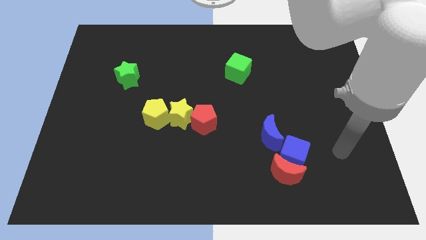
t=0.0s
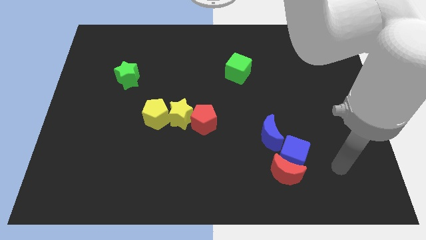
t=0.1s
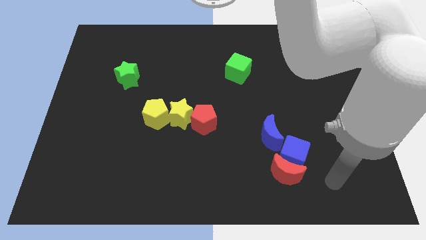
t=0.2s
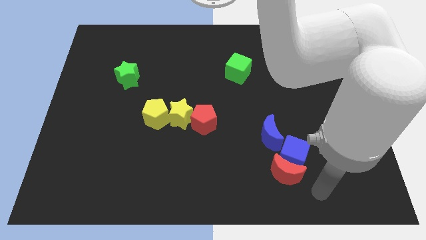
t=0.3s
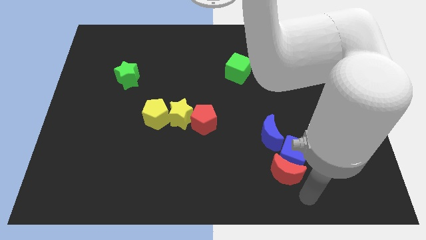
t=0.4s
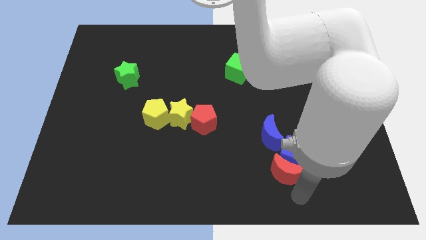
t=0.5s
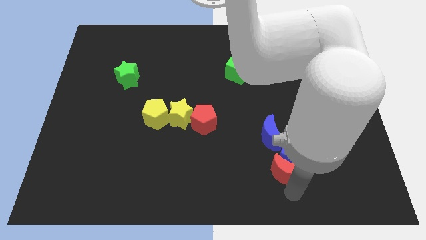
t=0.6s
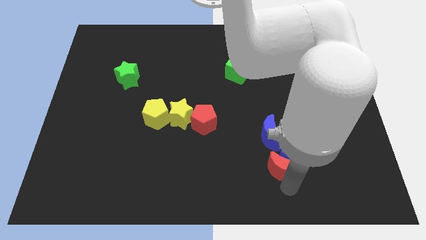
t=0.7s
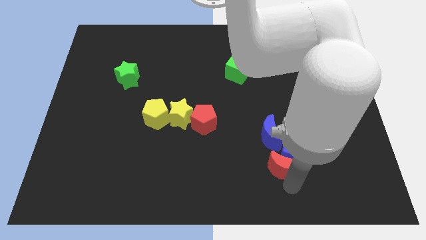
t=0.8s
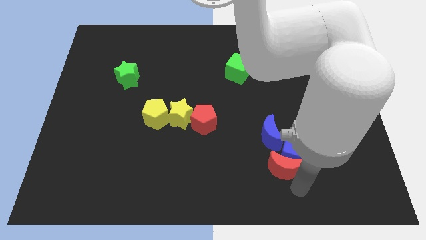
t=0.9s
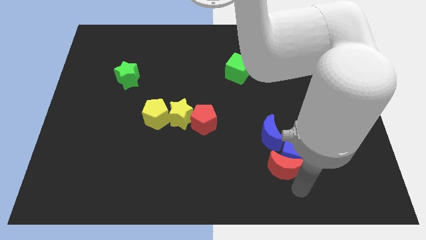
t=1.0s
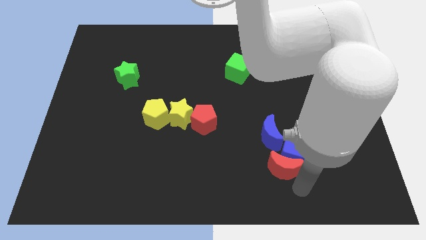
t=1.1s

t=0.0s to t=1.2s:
slightly touch bottom of red moon

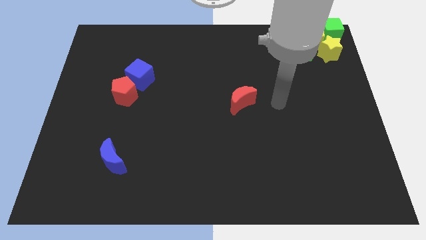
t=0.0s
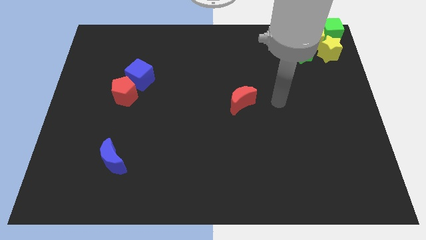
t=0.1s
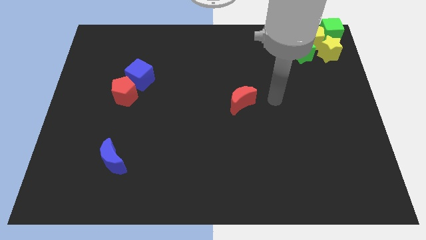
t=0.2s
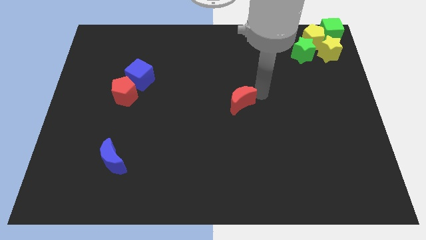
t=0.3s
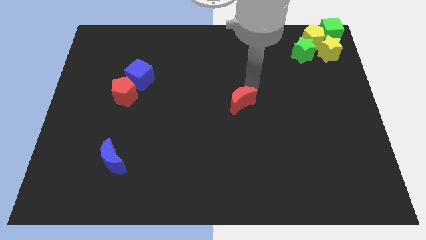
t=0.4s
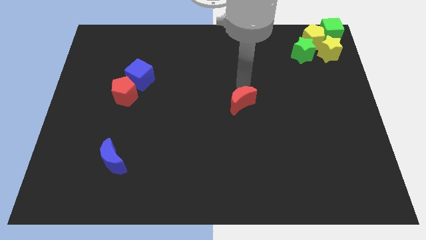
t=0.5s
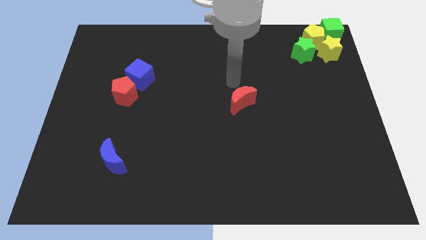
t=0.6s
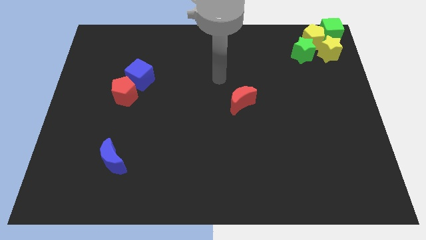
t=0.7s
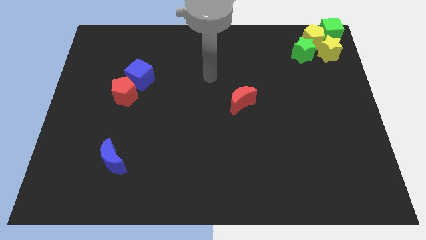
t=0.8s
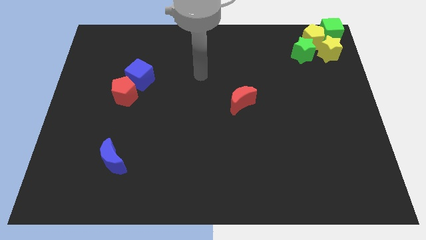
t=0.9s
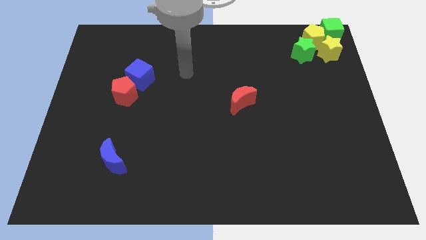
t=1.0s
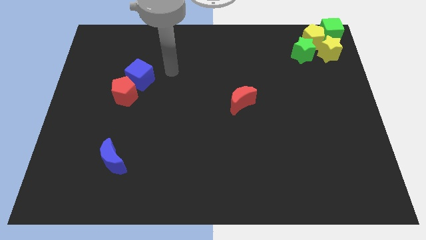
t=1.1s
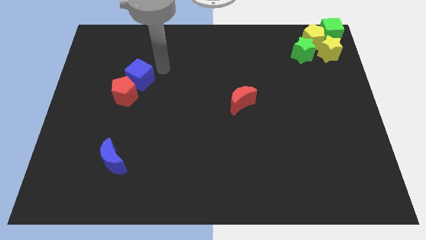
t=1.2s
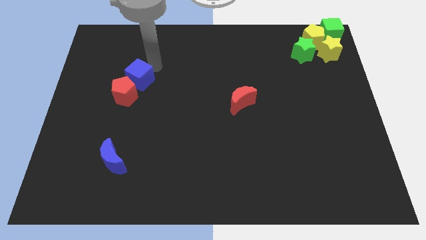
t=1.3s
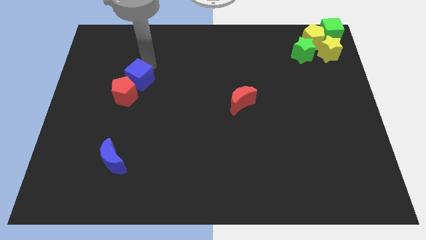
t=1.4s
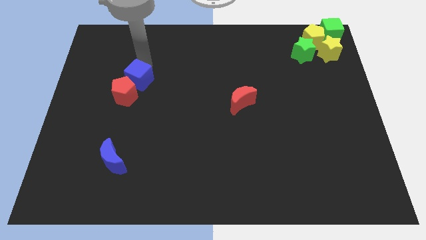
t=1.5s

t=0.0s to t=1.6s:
move your hand towards the blue cube

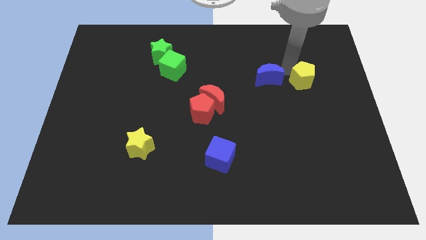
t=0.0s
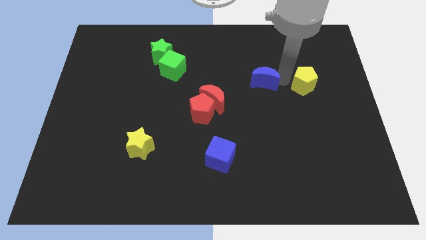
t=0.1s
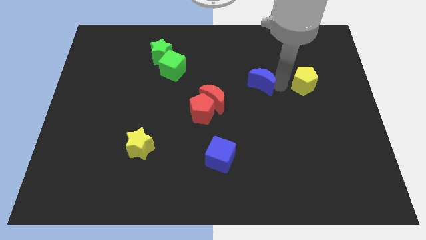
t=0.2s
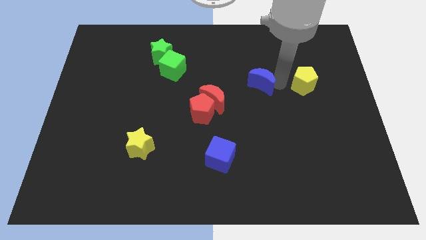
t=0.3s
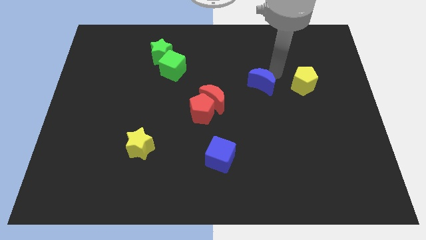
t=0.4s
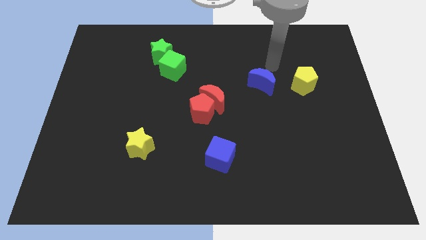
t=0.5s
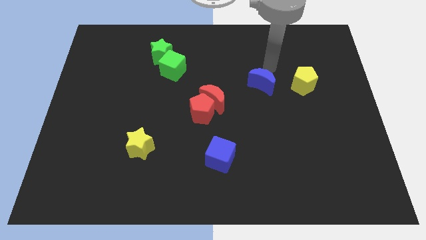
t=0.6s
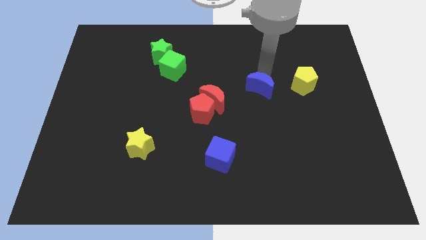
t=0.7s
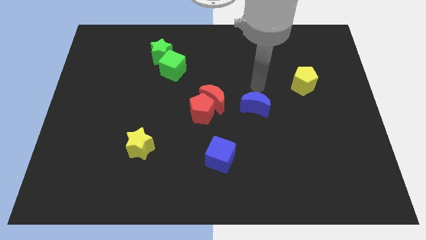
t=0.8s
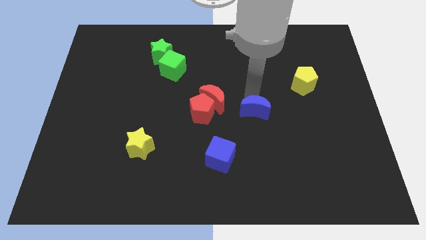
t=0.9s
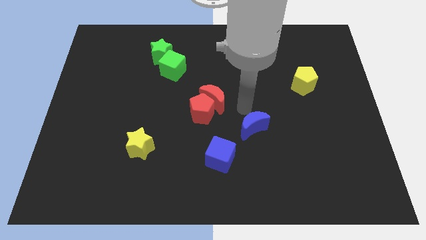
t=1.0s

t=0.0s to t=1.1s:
put the blue moon in between the blue cube and yellow pentagon

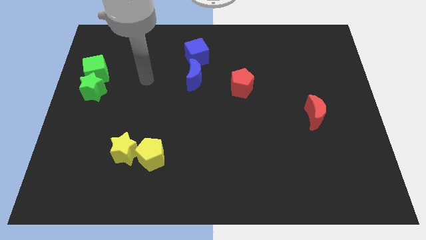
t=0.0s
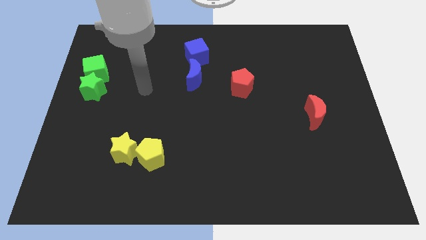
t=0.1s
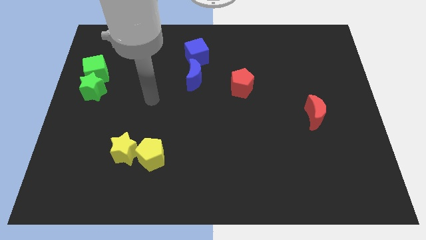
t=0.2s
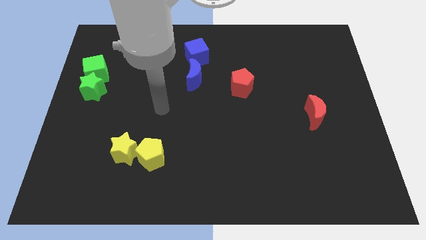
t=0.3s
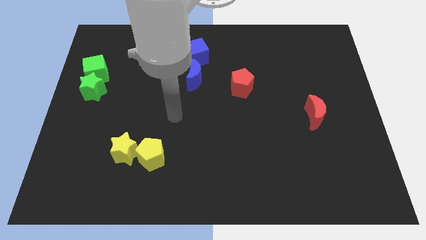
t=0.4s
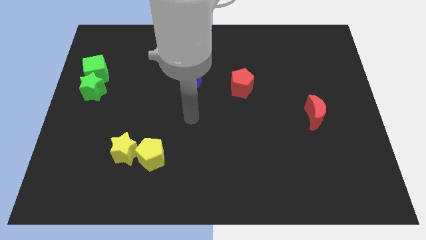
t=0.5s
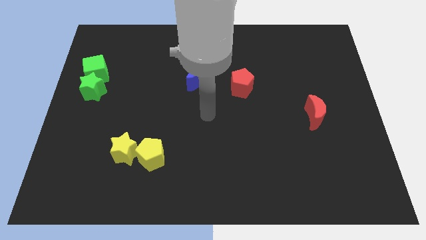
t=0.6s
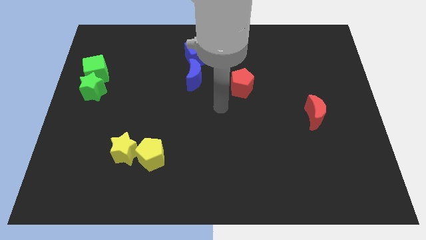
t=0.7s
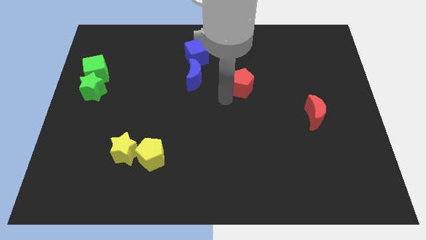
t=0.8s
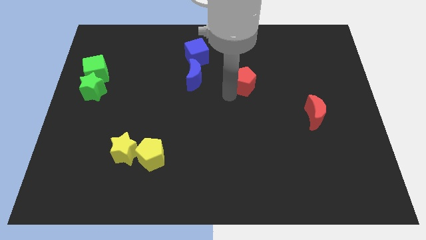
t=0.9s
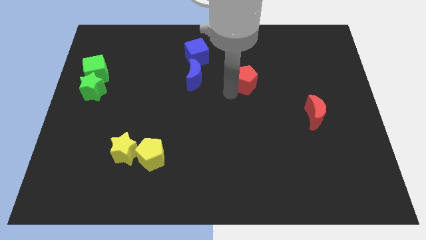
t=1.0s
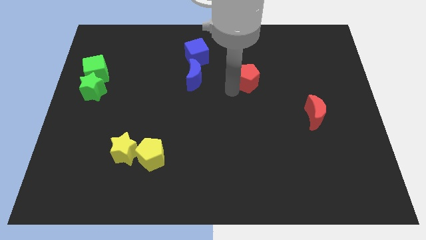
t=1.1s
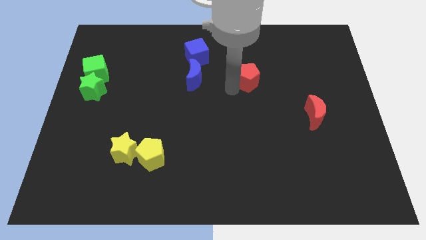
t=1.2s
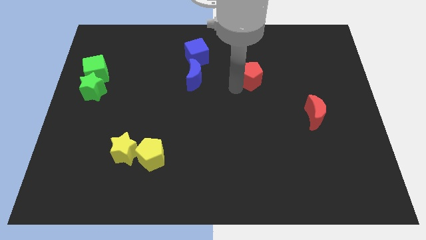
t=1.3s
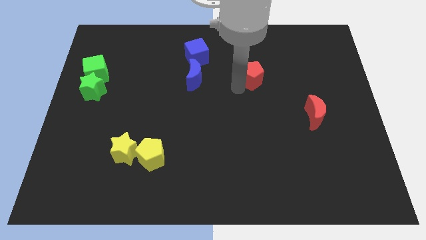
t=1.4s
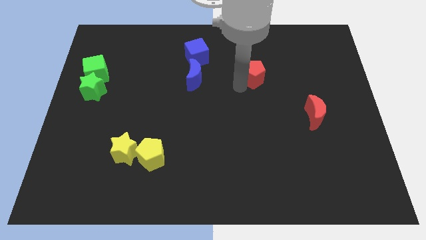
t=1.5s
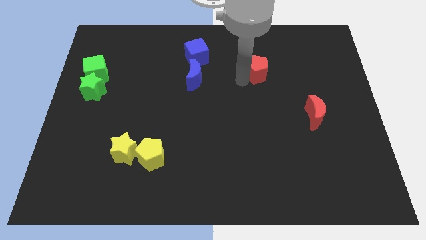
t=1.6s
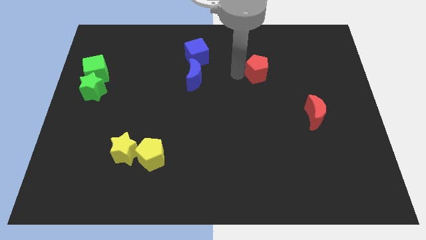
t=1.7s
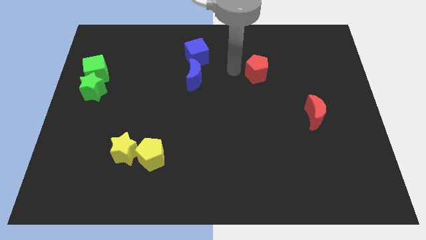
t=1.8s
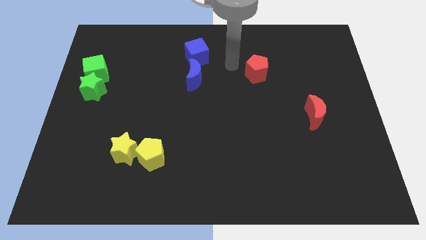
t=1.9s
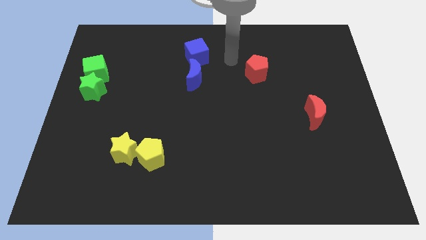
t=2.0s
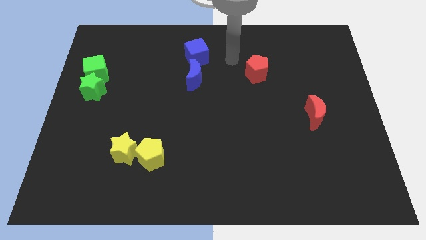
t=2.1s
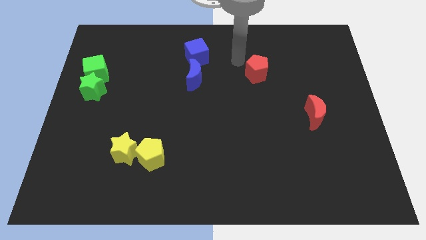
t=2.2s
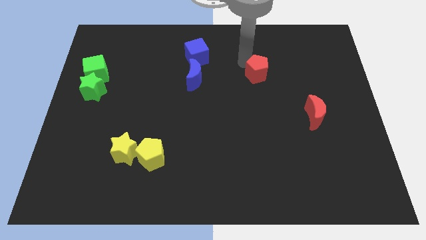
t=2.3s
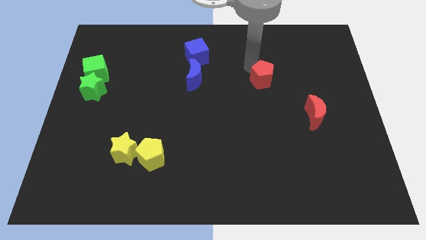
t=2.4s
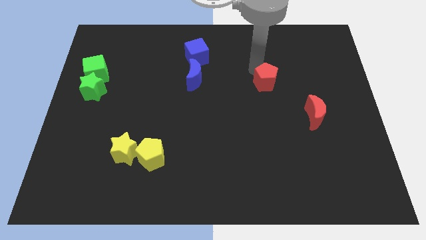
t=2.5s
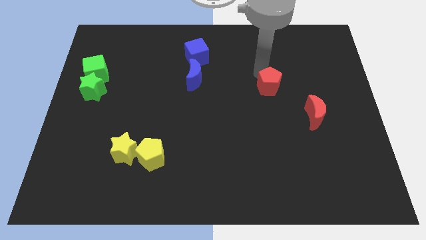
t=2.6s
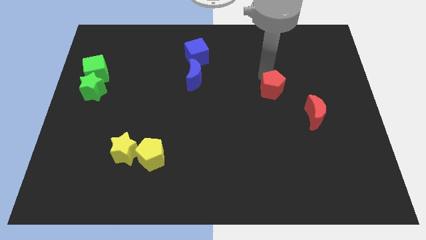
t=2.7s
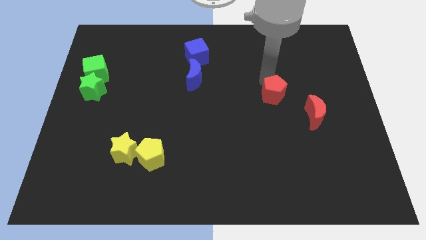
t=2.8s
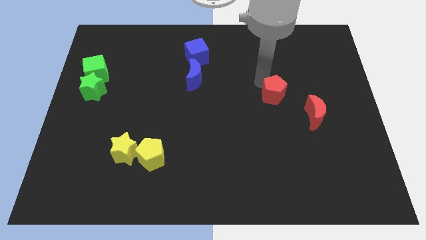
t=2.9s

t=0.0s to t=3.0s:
push the red pentagon to the top left of the red crescent

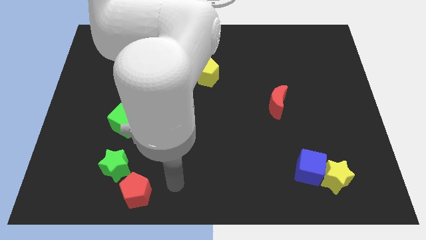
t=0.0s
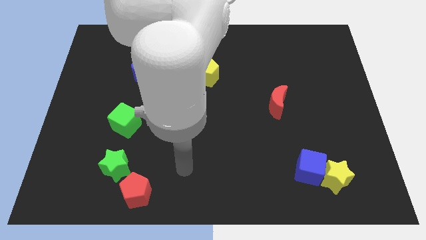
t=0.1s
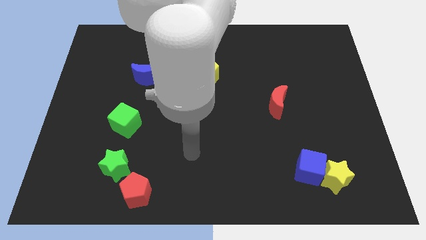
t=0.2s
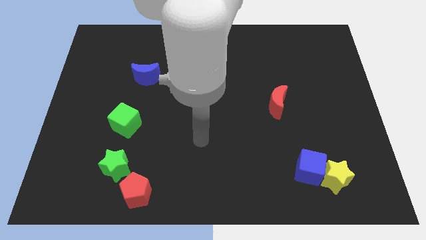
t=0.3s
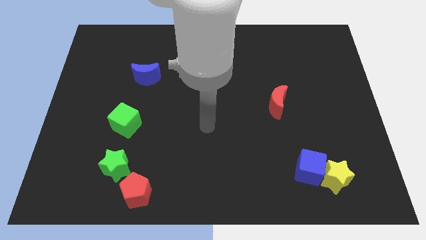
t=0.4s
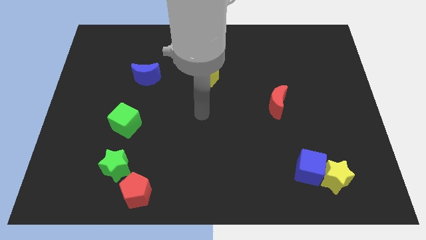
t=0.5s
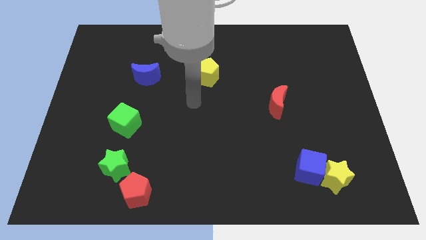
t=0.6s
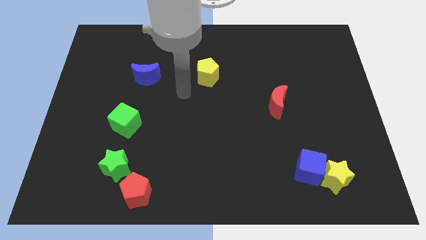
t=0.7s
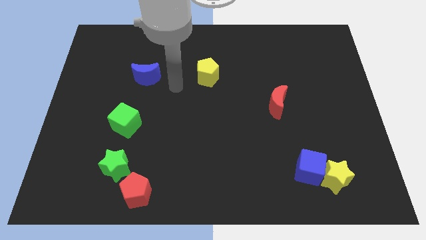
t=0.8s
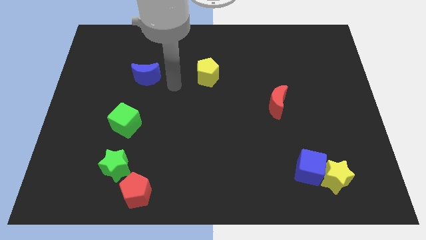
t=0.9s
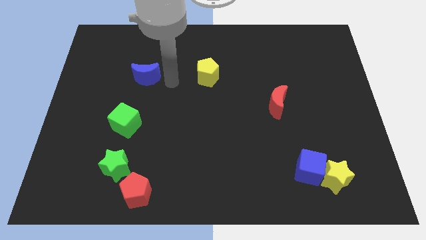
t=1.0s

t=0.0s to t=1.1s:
move your arm away from the red pentagon

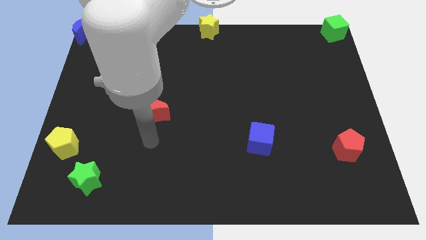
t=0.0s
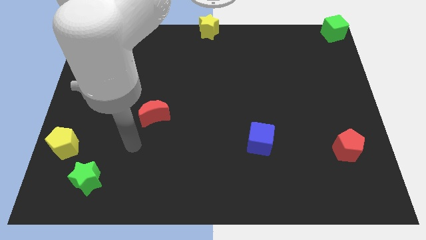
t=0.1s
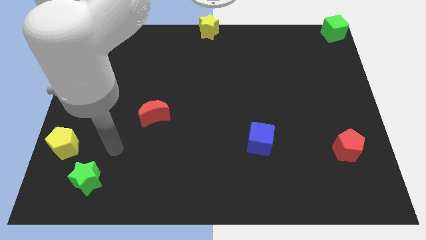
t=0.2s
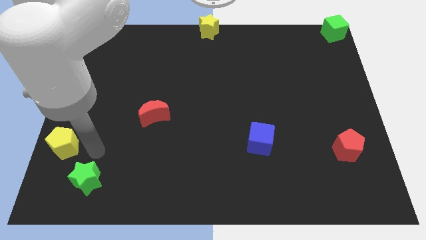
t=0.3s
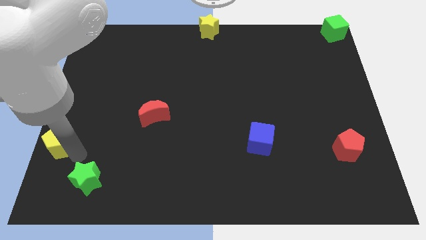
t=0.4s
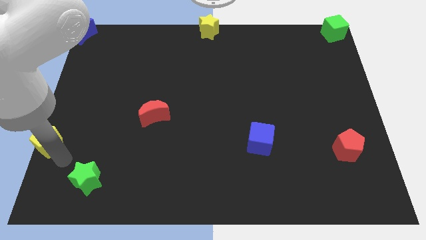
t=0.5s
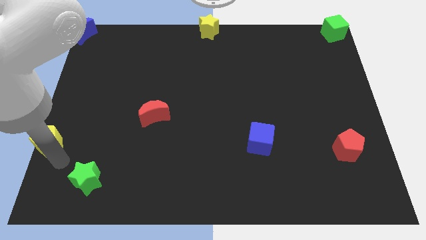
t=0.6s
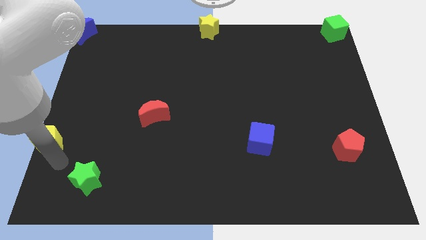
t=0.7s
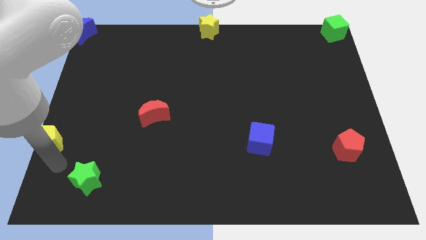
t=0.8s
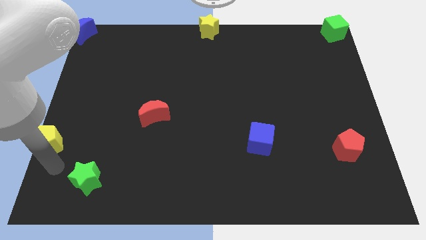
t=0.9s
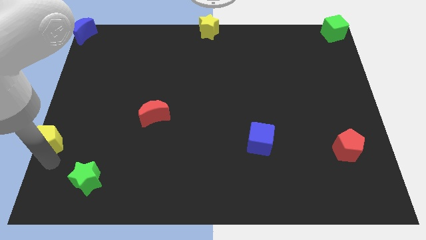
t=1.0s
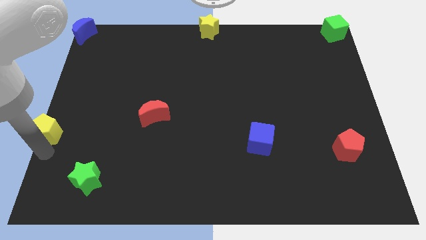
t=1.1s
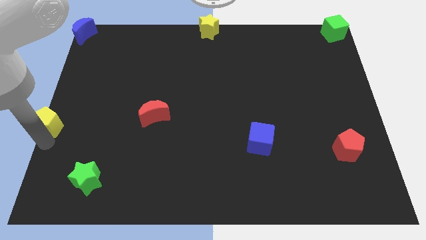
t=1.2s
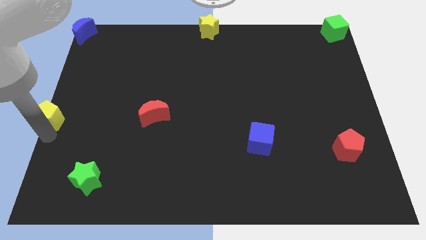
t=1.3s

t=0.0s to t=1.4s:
push the yellow pentagon to the center left of the board
